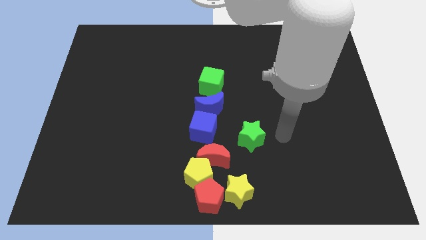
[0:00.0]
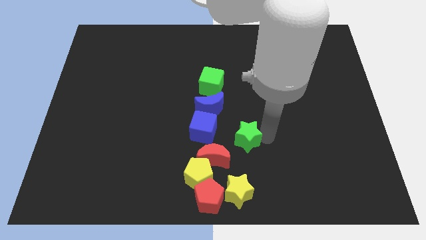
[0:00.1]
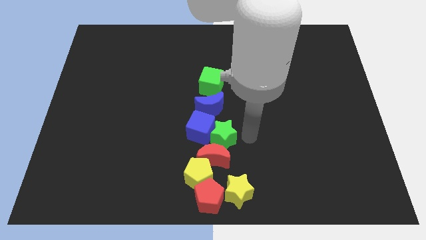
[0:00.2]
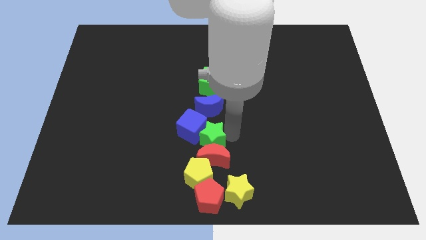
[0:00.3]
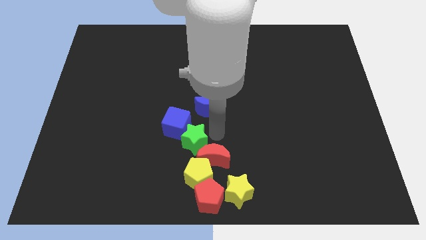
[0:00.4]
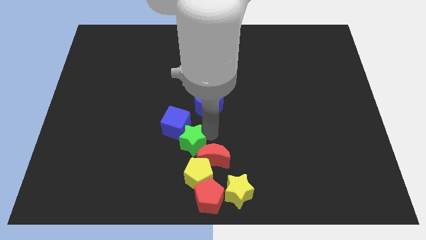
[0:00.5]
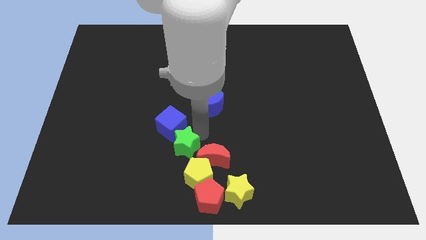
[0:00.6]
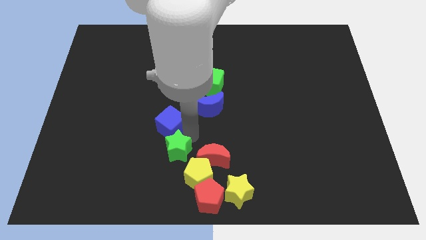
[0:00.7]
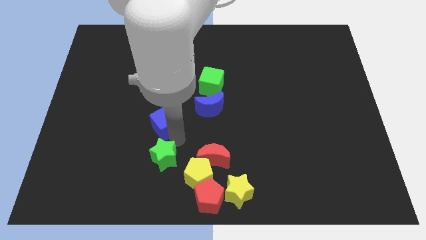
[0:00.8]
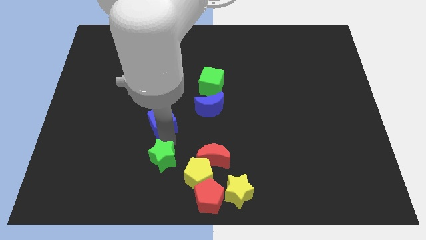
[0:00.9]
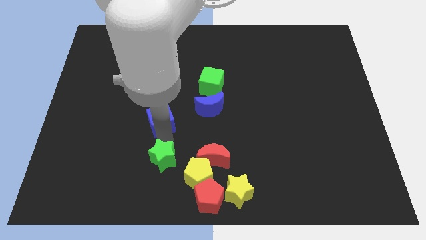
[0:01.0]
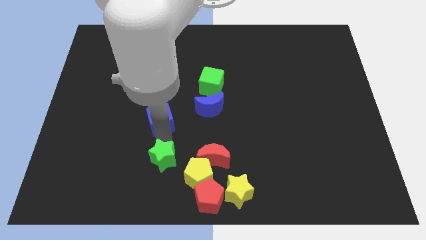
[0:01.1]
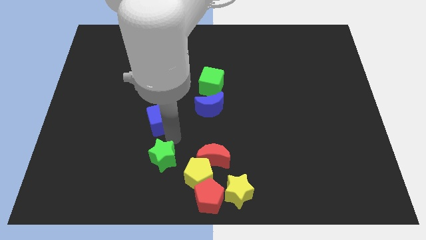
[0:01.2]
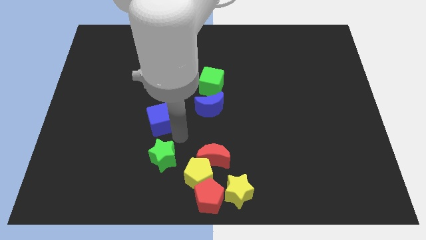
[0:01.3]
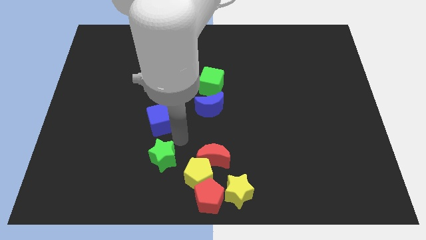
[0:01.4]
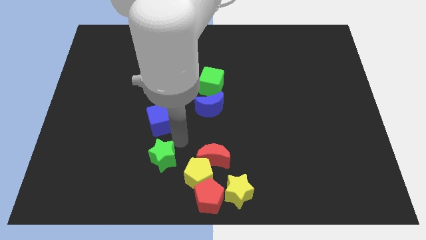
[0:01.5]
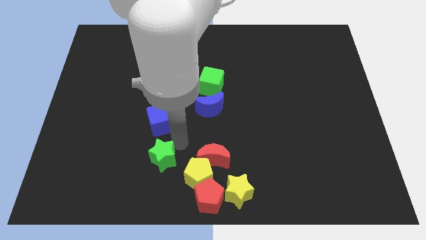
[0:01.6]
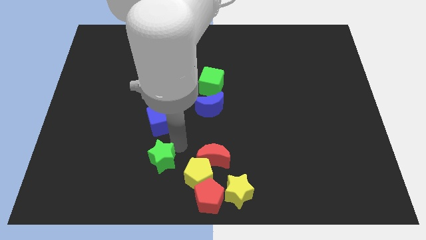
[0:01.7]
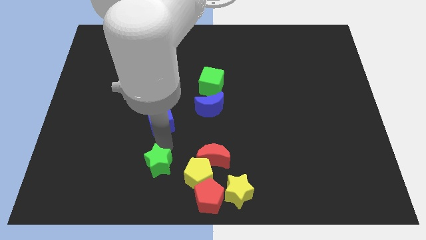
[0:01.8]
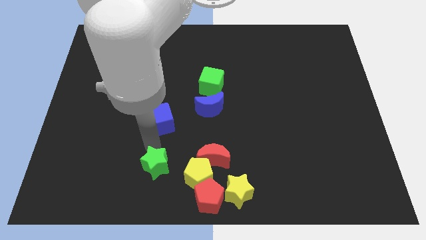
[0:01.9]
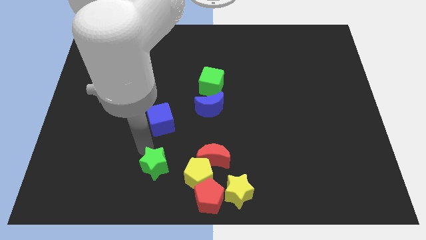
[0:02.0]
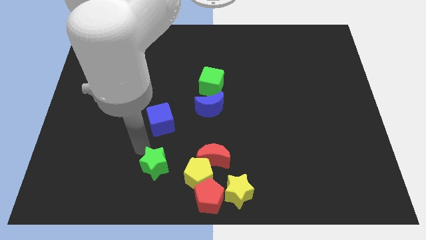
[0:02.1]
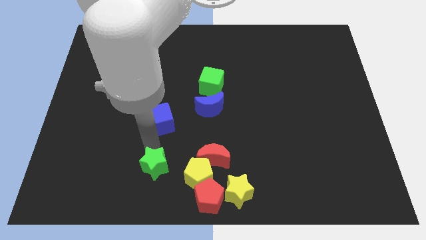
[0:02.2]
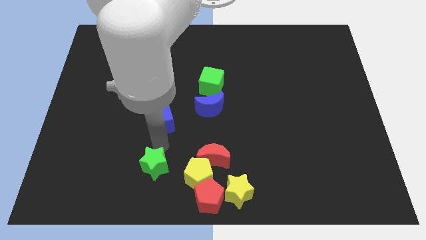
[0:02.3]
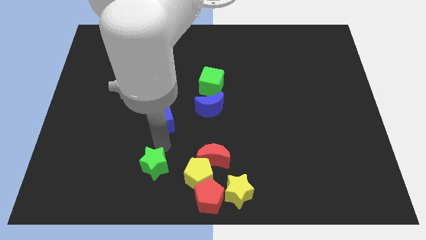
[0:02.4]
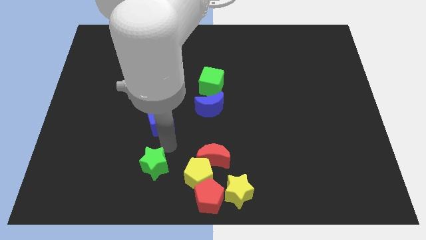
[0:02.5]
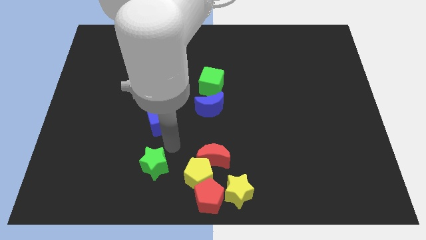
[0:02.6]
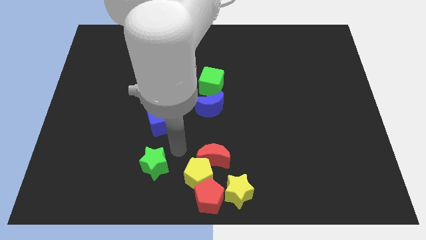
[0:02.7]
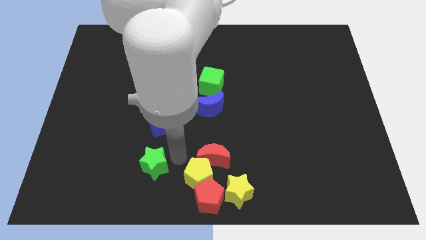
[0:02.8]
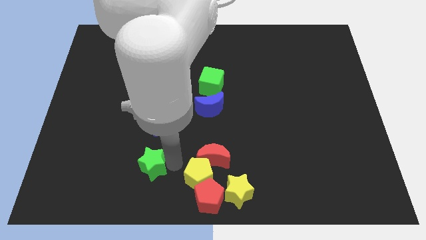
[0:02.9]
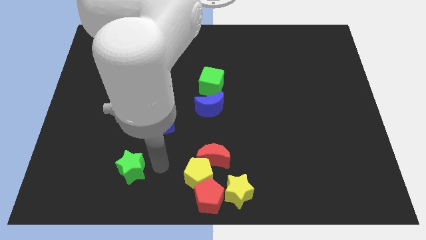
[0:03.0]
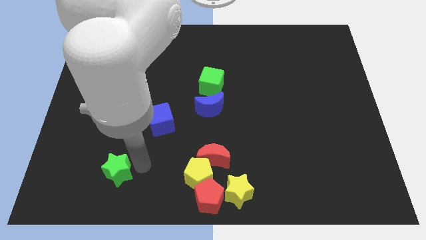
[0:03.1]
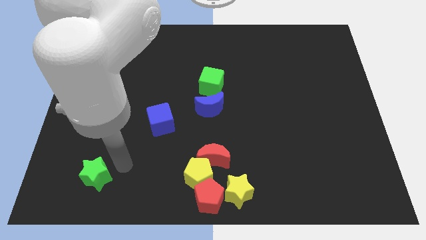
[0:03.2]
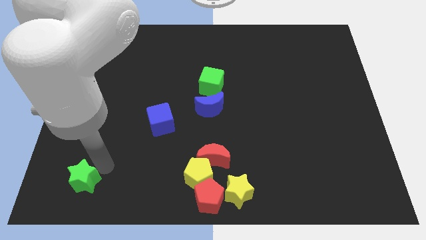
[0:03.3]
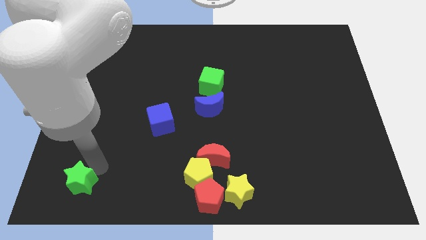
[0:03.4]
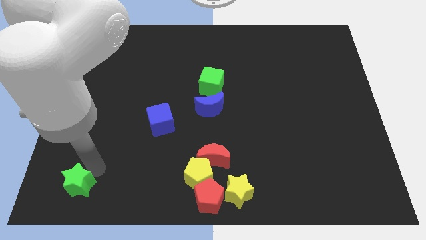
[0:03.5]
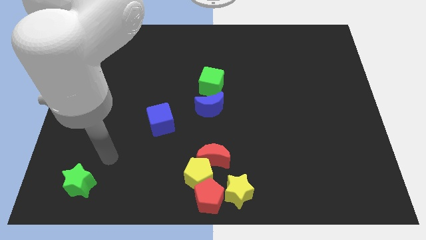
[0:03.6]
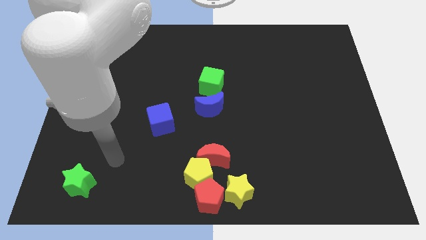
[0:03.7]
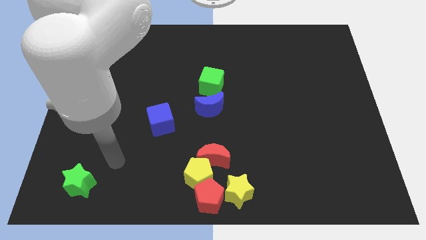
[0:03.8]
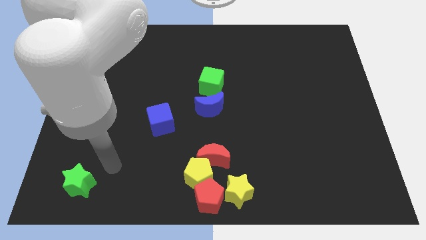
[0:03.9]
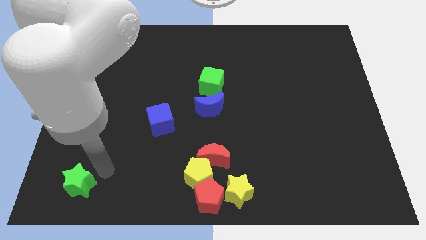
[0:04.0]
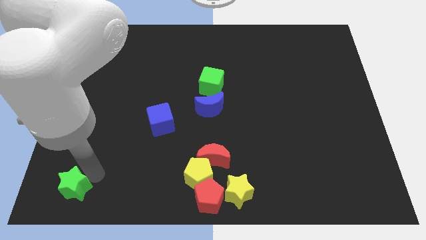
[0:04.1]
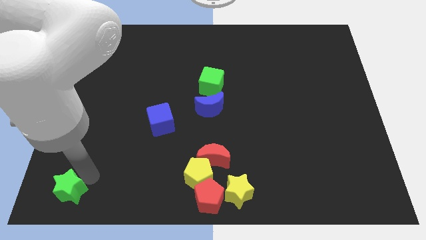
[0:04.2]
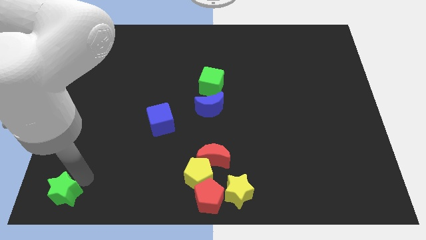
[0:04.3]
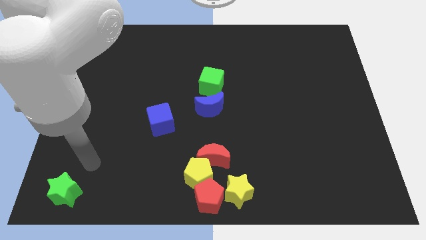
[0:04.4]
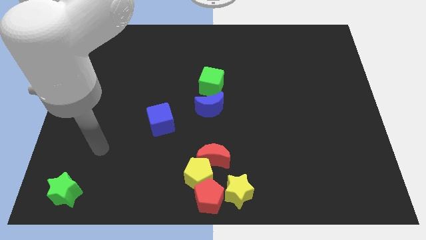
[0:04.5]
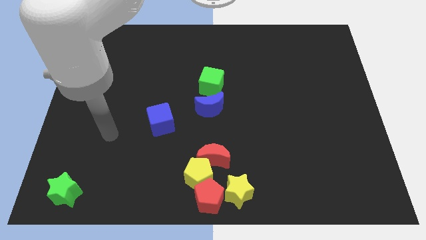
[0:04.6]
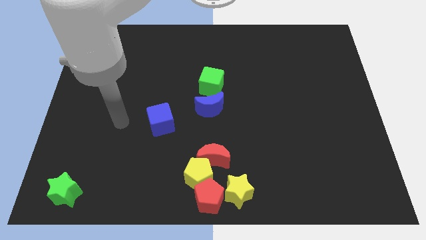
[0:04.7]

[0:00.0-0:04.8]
move the green star to the bottom left corner of the board

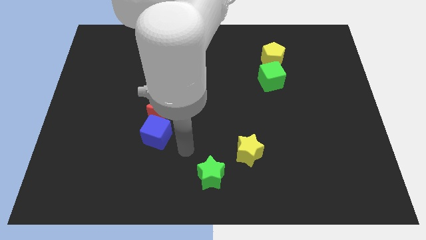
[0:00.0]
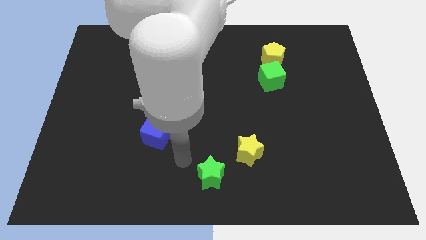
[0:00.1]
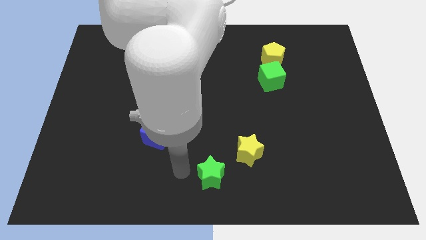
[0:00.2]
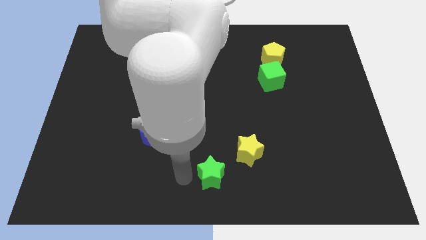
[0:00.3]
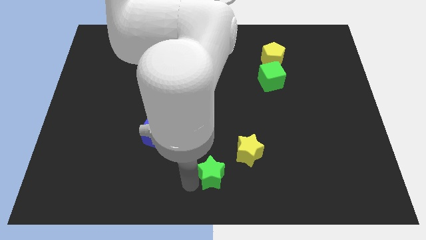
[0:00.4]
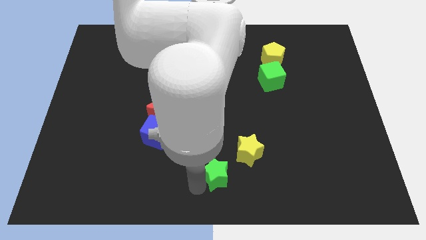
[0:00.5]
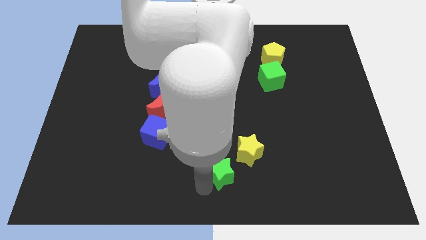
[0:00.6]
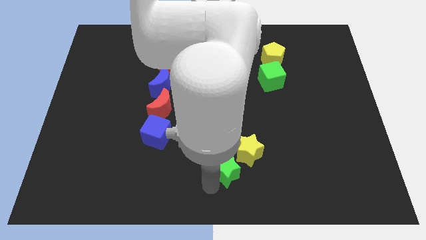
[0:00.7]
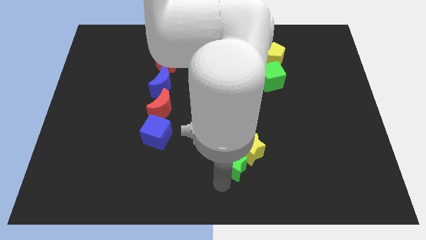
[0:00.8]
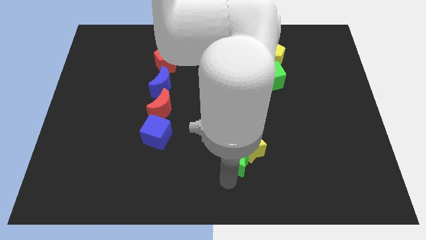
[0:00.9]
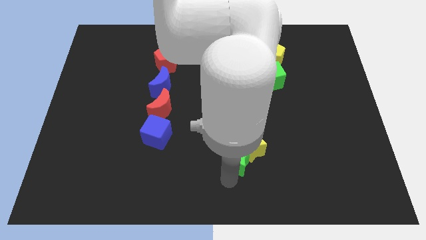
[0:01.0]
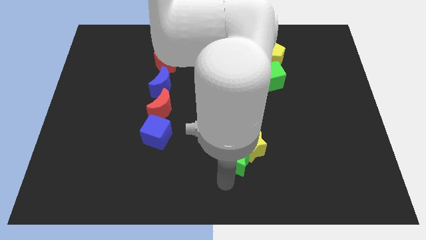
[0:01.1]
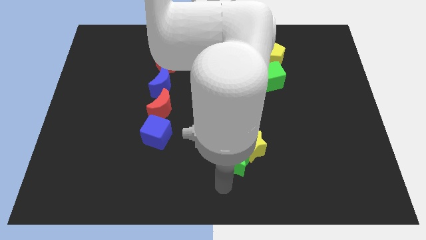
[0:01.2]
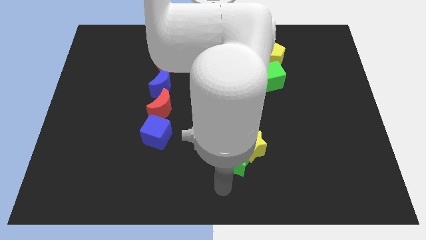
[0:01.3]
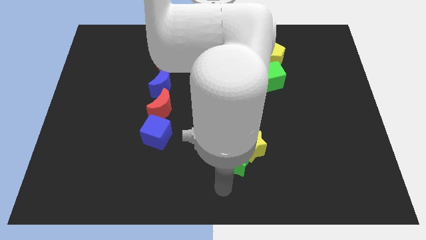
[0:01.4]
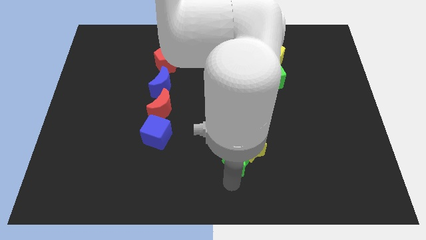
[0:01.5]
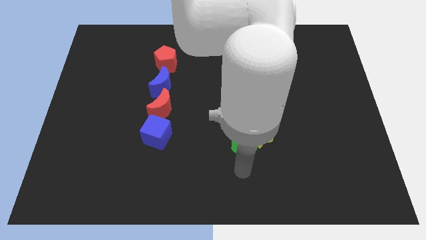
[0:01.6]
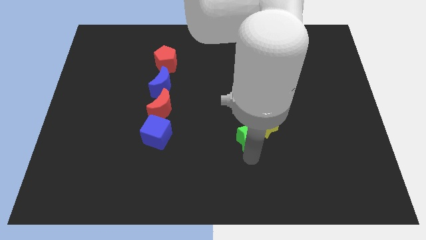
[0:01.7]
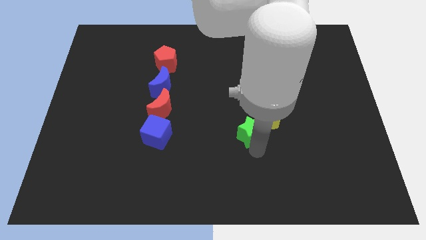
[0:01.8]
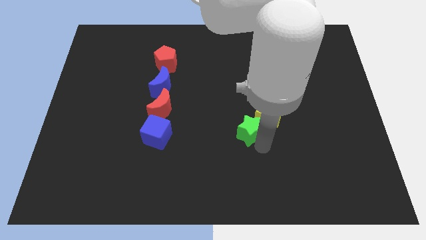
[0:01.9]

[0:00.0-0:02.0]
slide the green star into the yellow star

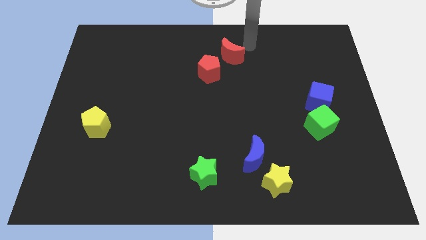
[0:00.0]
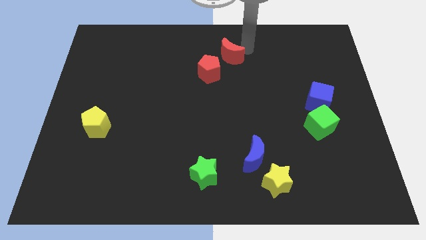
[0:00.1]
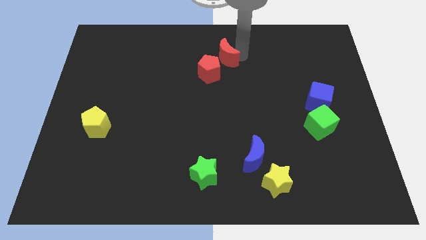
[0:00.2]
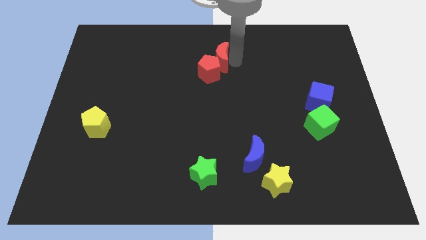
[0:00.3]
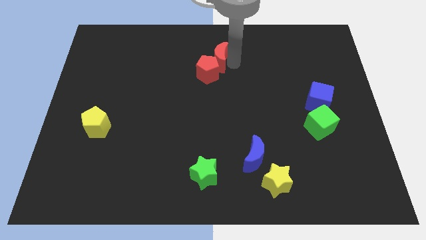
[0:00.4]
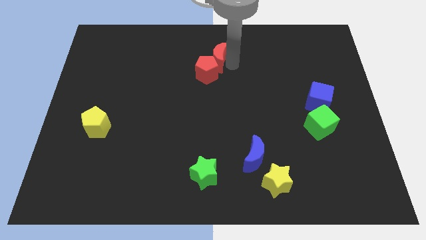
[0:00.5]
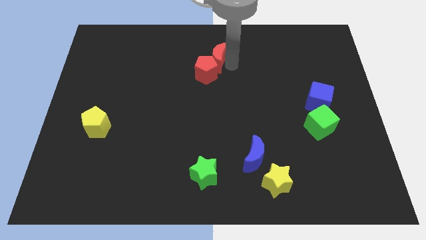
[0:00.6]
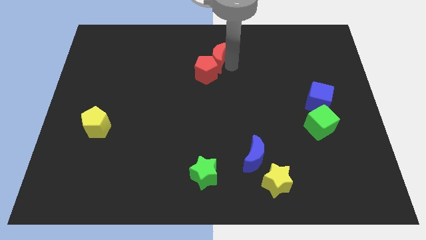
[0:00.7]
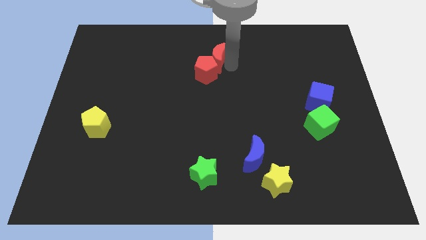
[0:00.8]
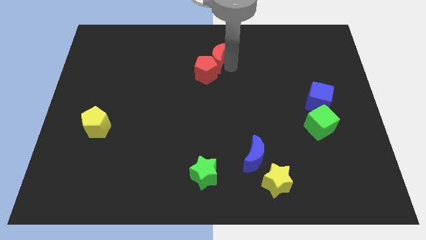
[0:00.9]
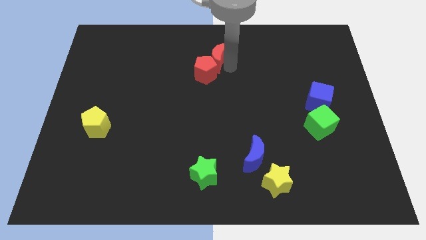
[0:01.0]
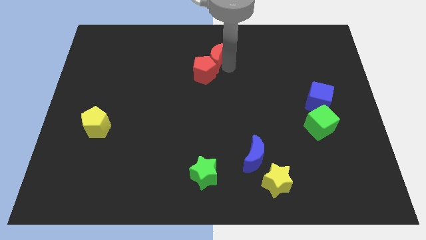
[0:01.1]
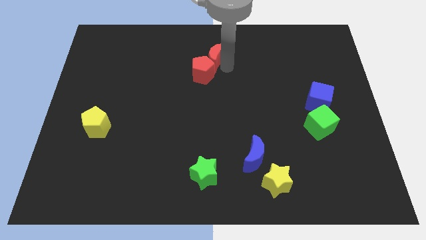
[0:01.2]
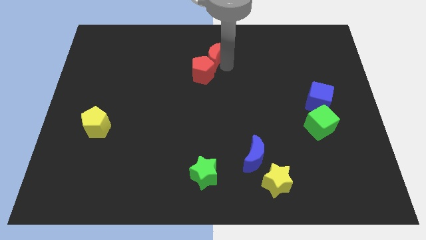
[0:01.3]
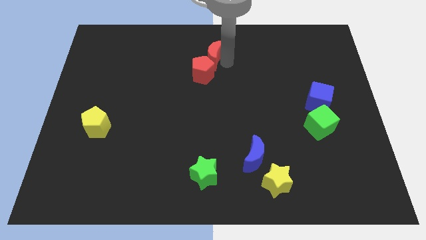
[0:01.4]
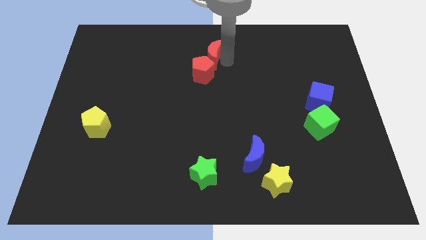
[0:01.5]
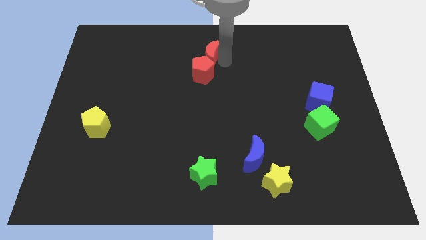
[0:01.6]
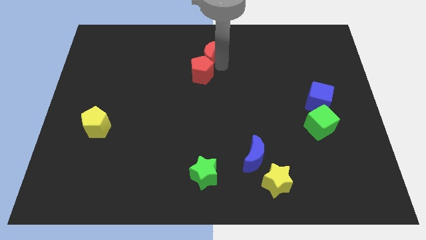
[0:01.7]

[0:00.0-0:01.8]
place the red crescent above the red pentagon

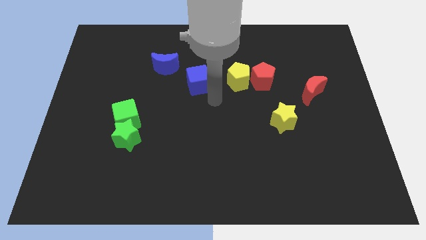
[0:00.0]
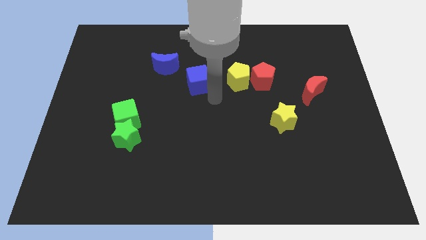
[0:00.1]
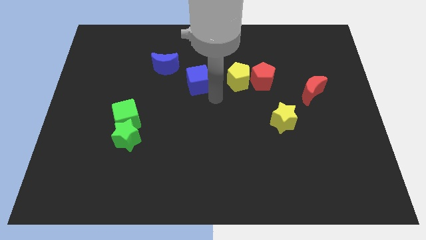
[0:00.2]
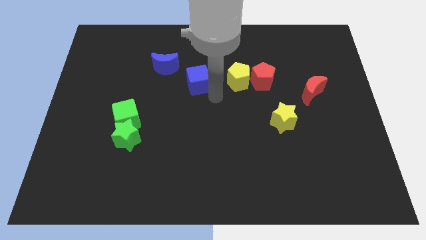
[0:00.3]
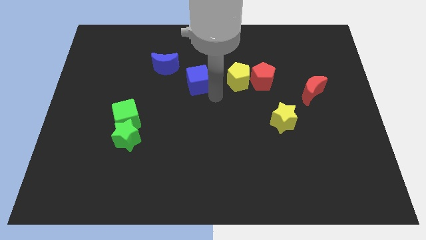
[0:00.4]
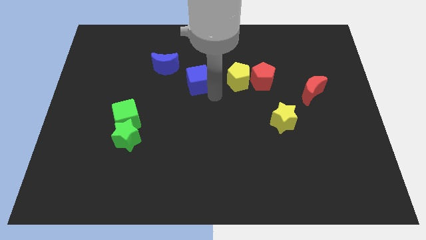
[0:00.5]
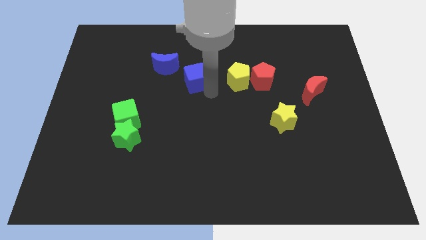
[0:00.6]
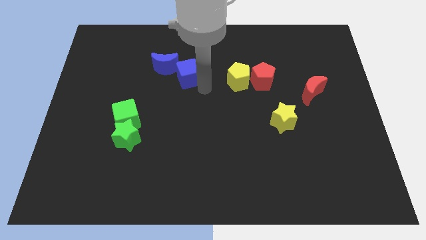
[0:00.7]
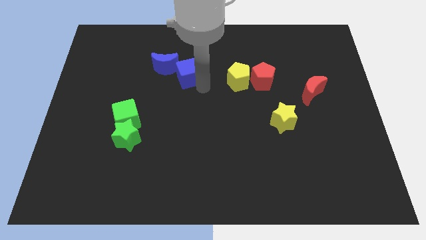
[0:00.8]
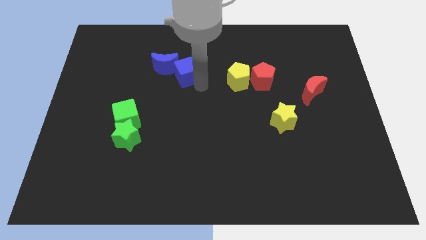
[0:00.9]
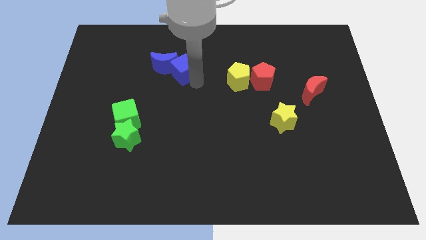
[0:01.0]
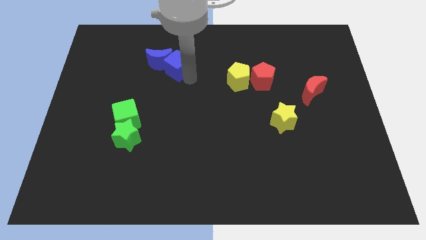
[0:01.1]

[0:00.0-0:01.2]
place the blue cube close to the blue moon
